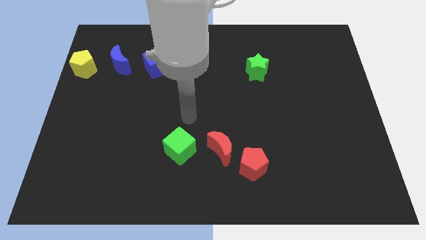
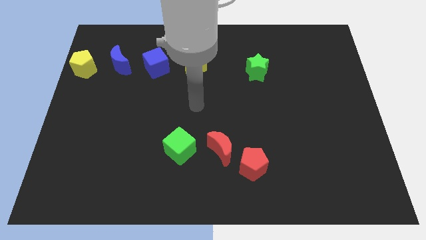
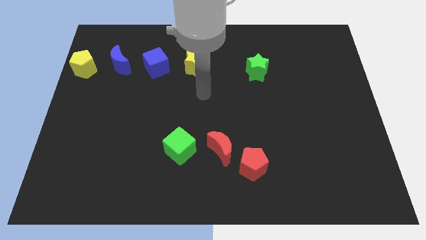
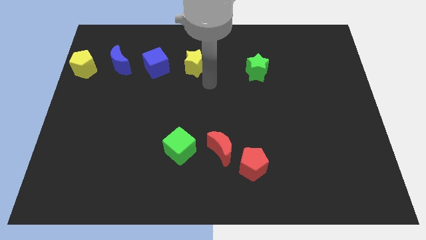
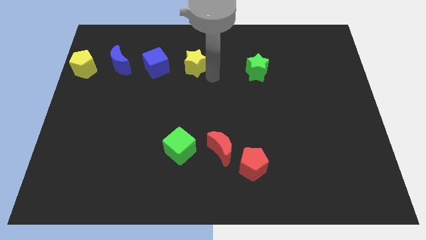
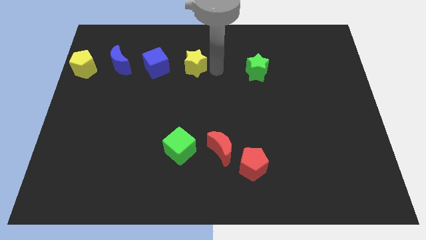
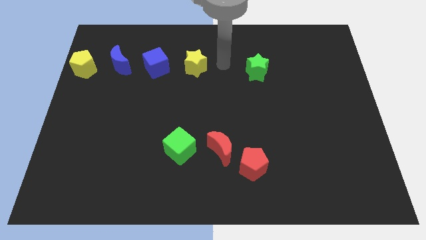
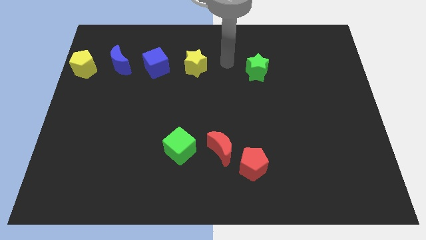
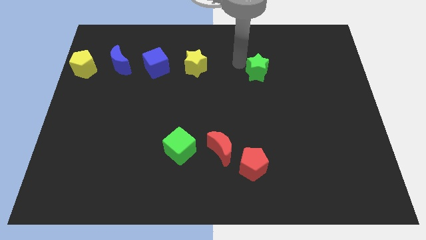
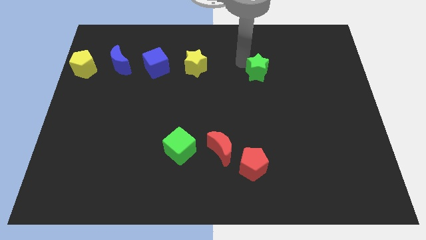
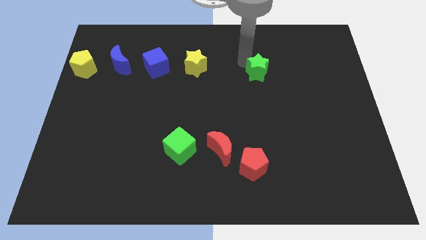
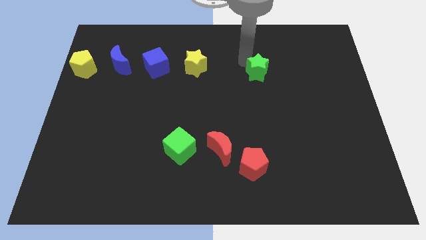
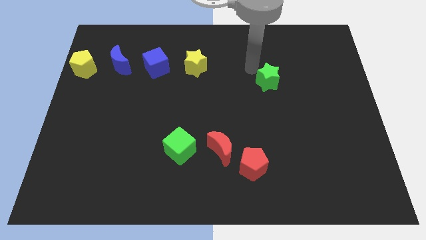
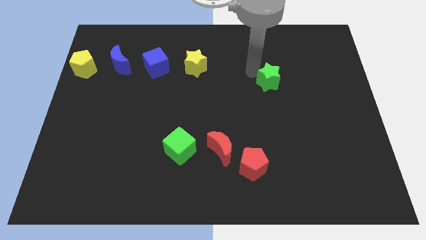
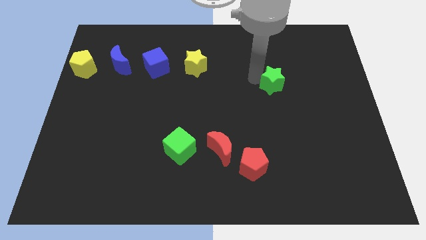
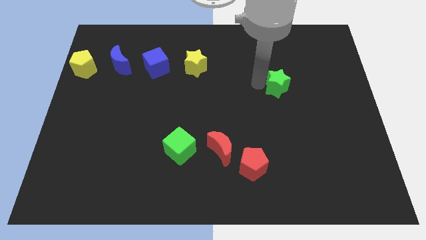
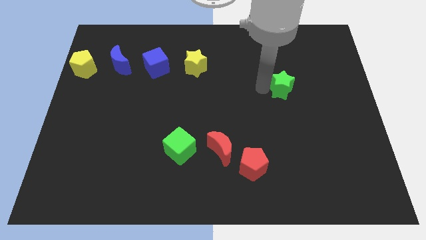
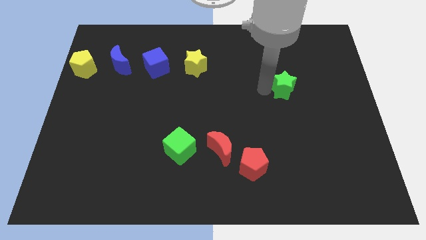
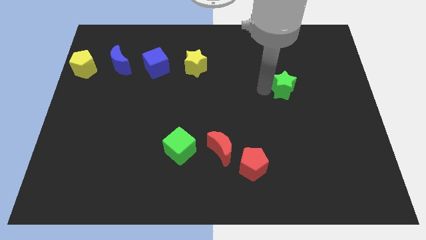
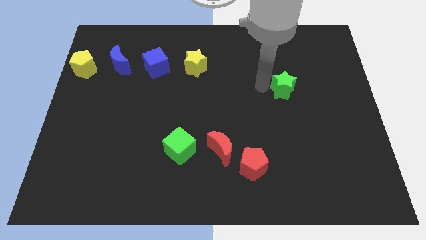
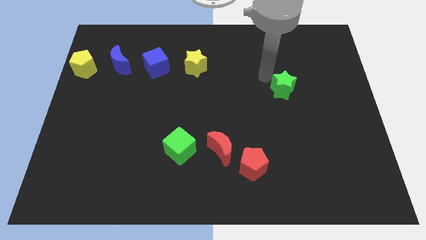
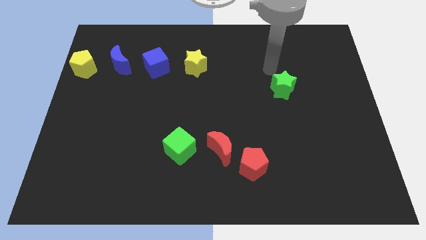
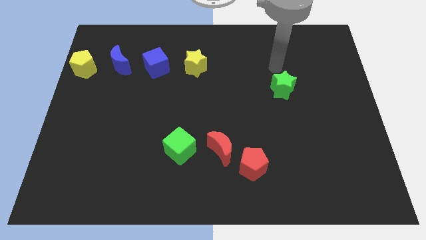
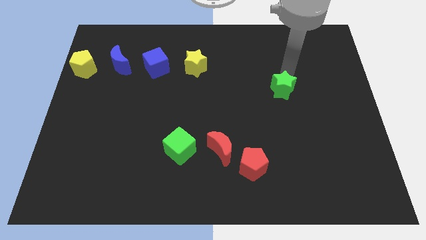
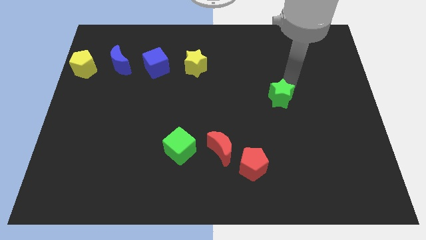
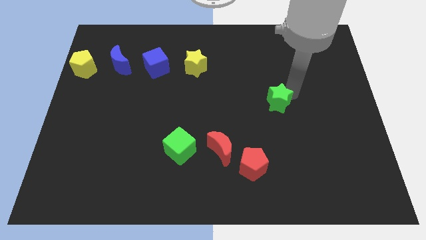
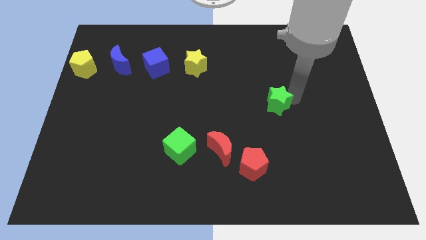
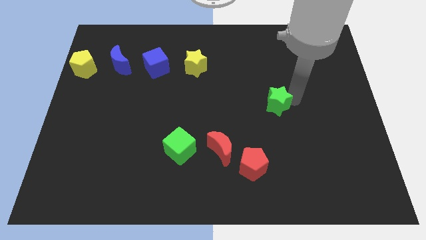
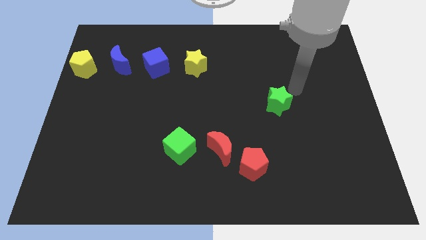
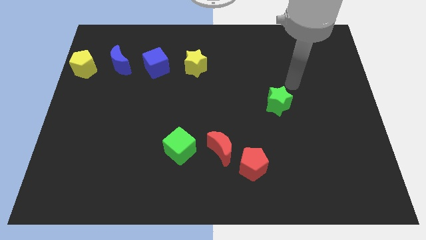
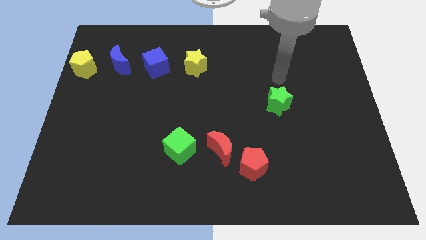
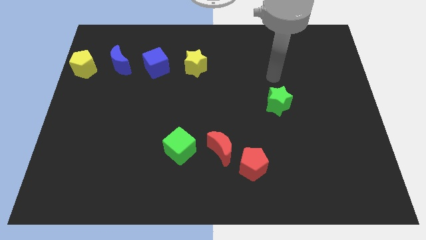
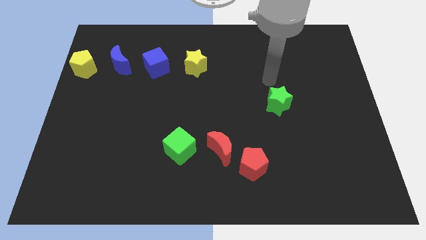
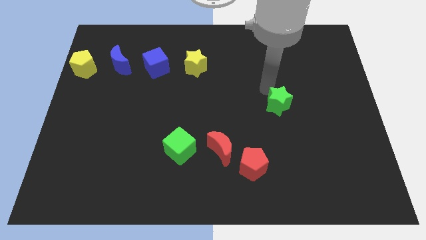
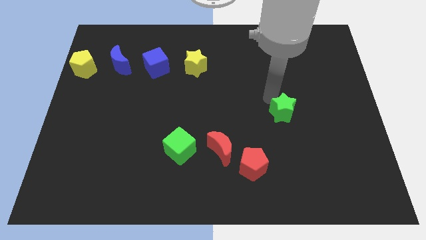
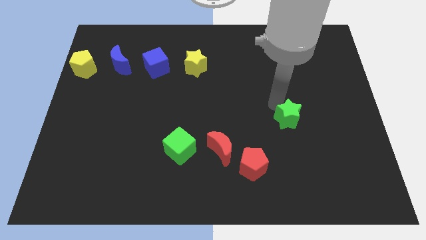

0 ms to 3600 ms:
push the green star to the top right of the red pentagon

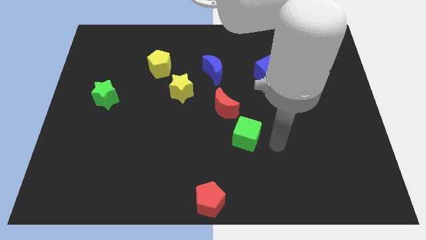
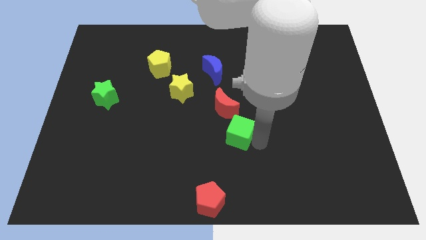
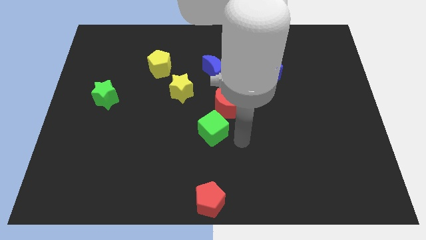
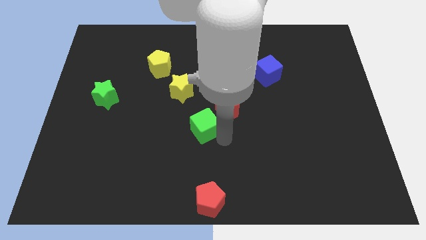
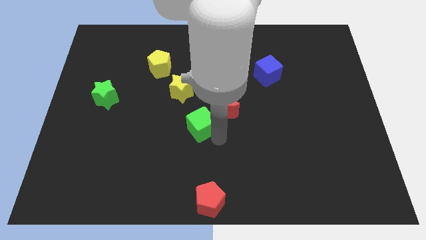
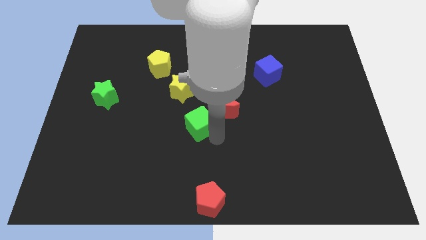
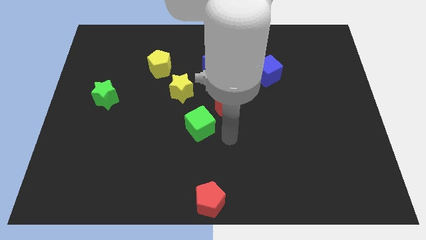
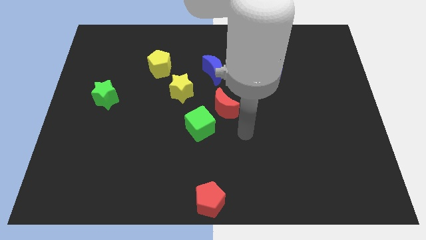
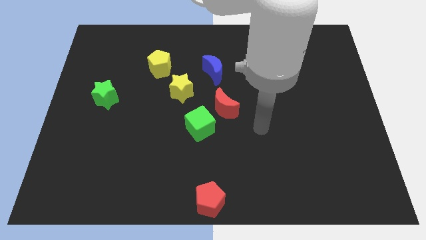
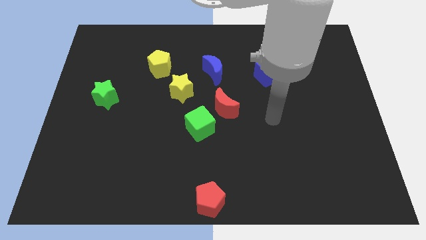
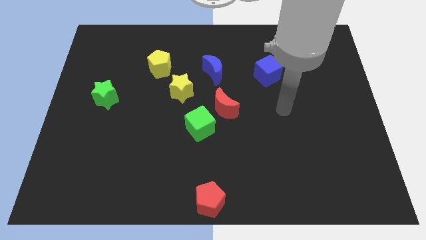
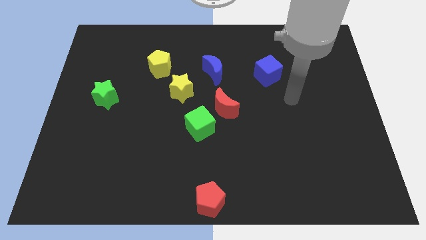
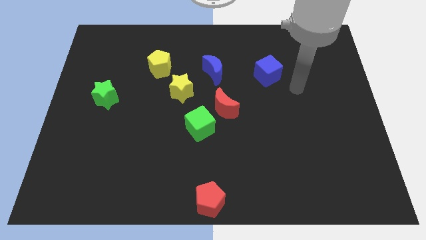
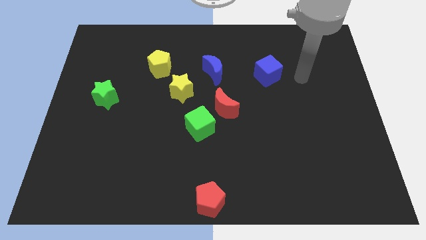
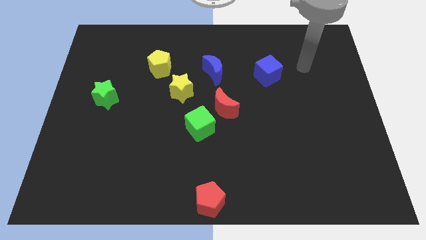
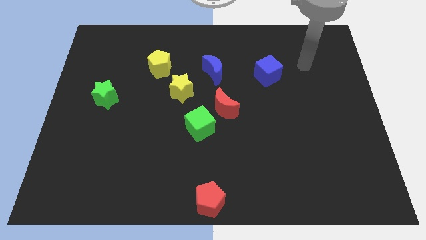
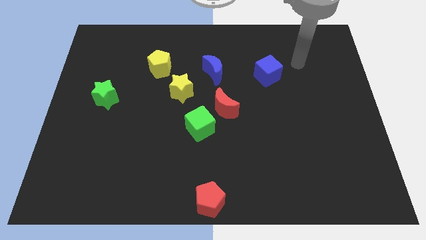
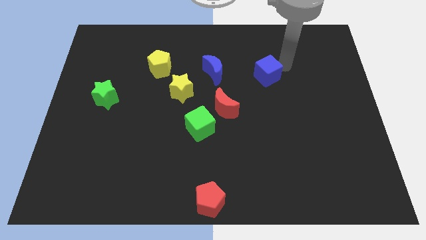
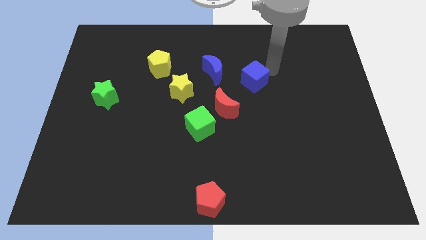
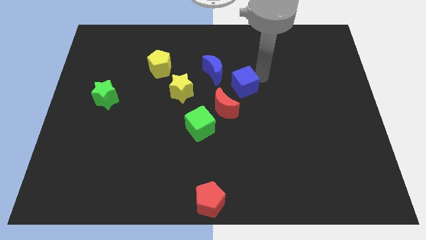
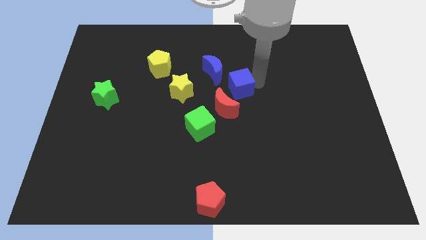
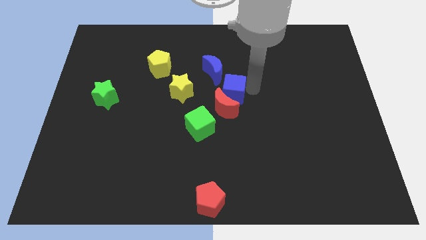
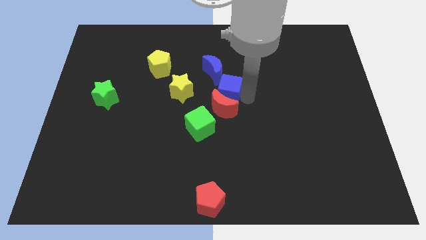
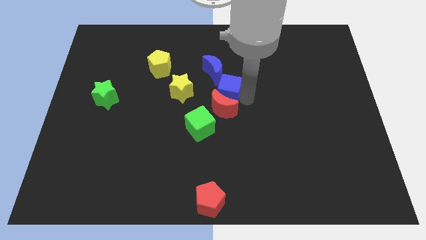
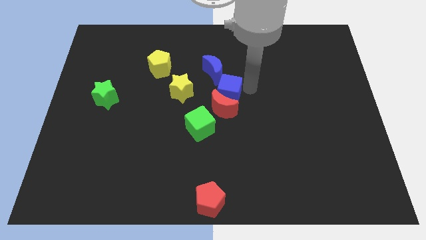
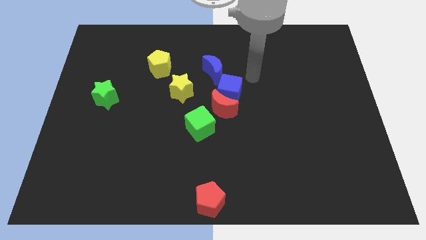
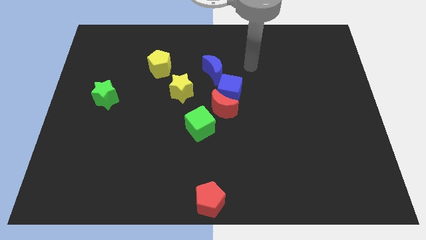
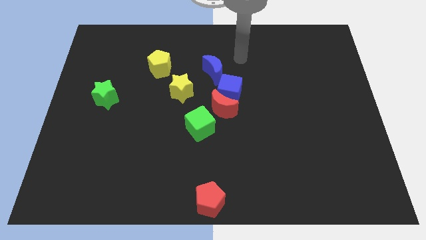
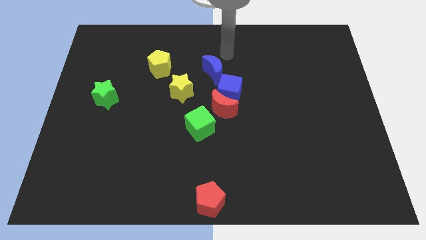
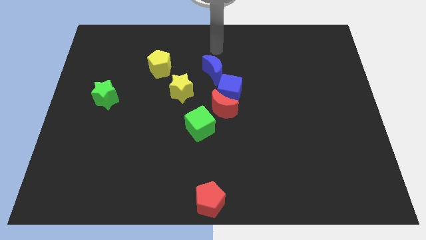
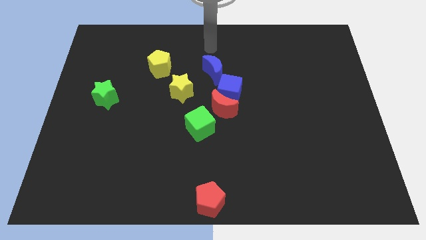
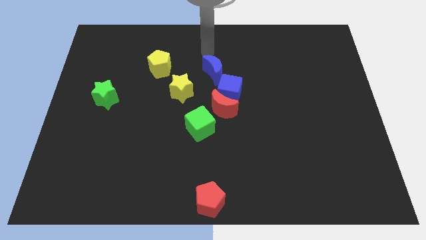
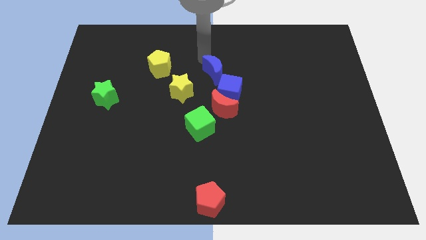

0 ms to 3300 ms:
push the blue cube into the red crescent

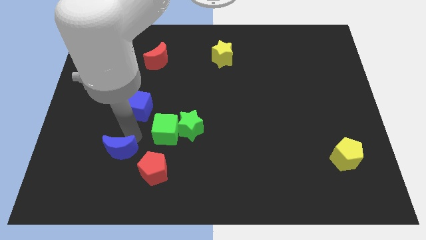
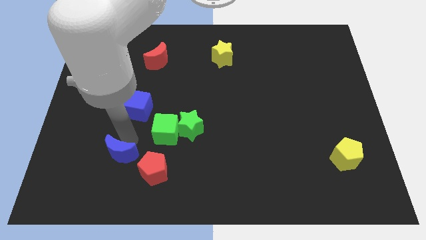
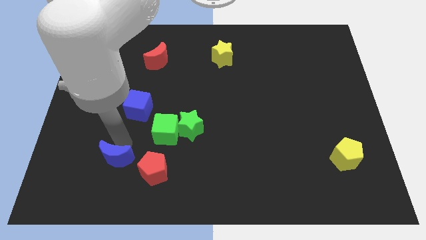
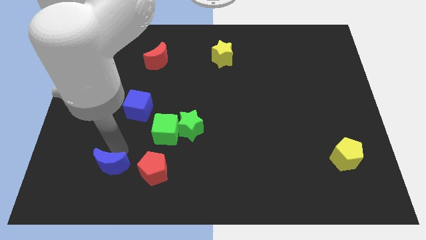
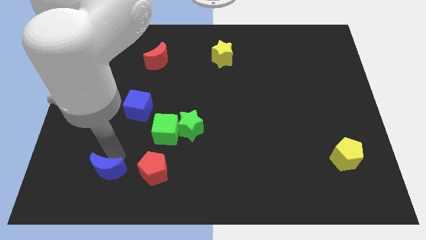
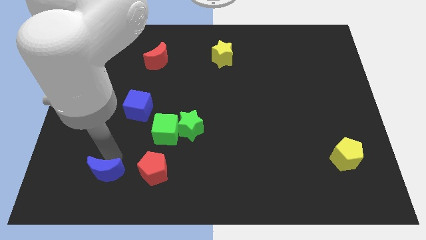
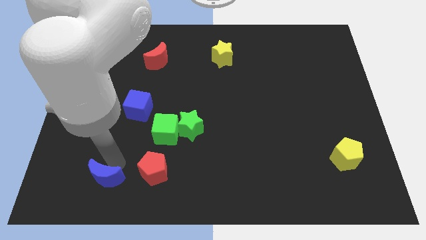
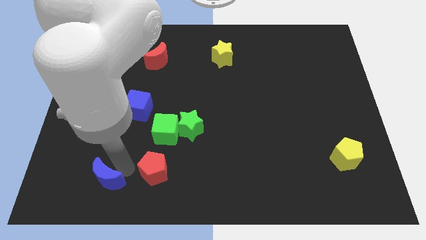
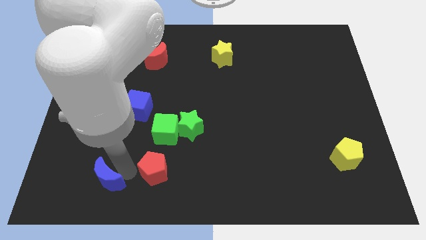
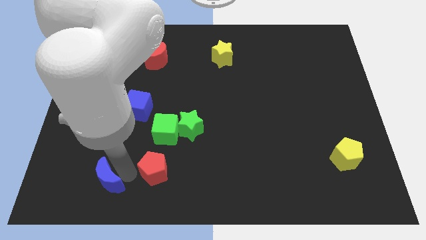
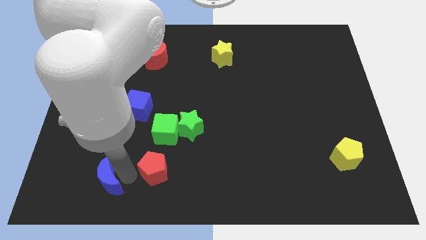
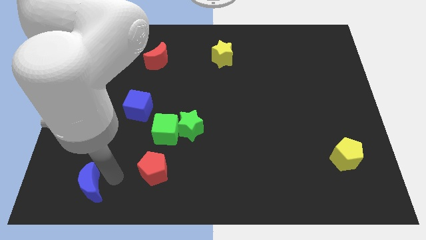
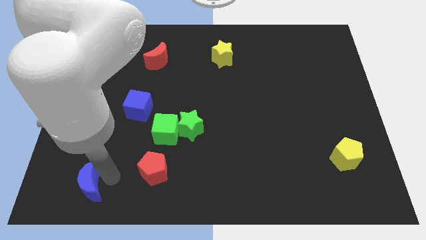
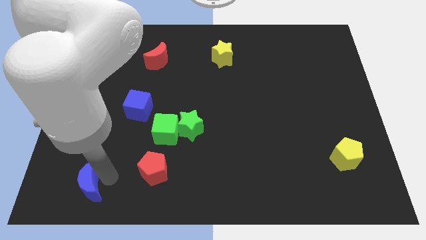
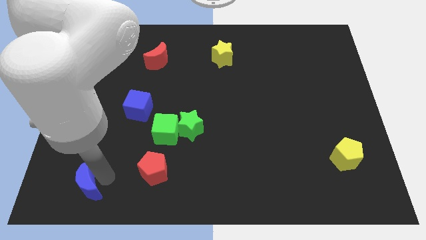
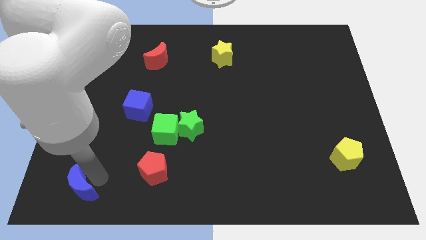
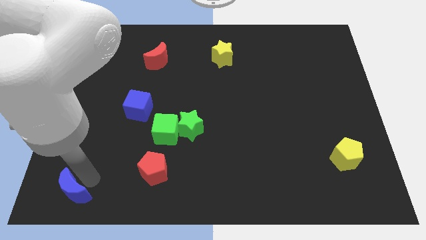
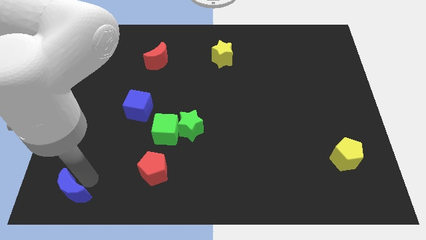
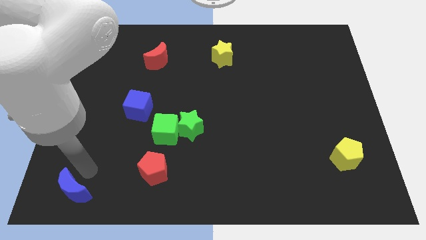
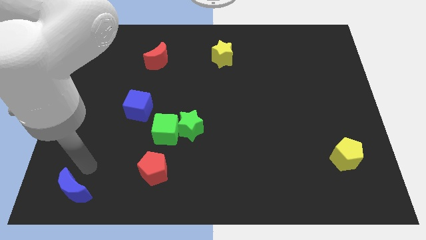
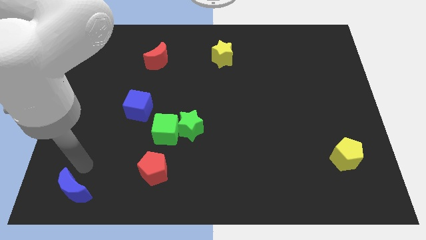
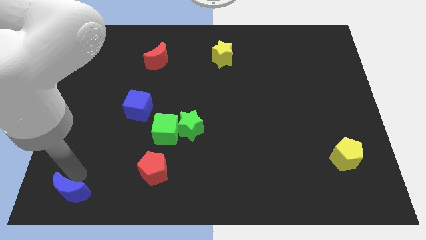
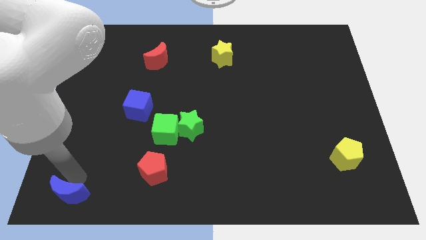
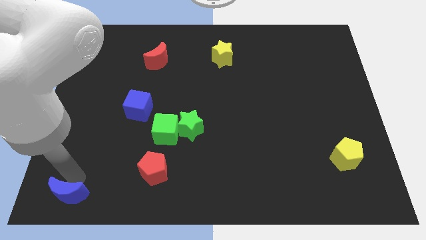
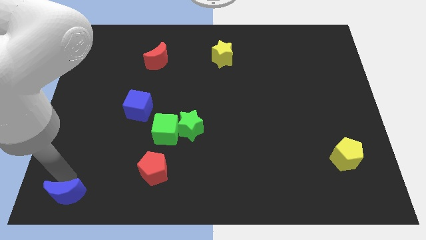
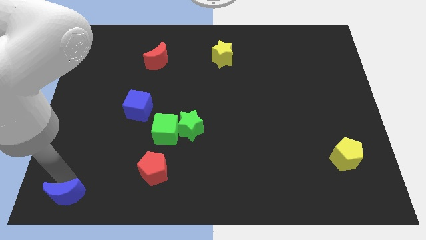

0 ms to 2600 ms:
move the blue moon to the bottom left
